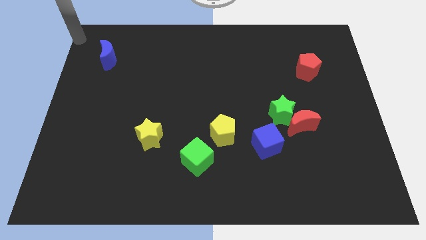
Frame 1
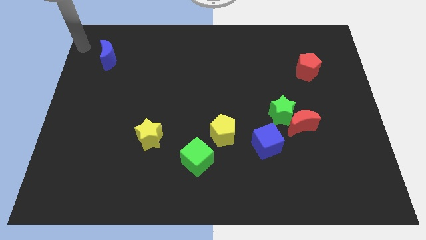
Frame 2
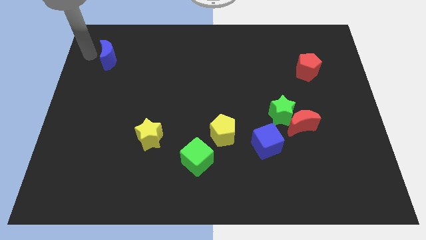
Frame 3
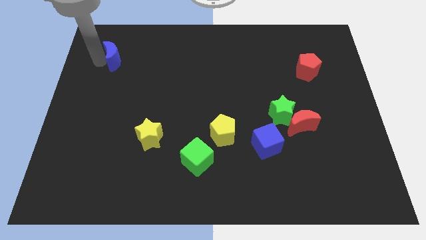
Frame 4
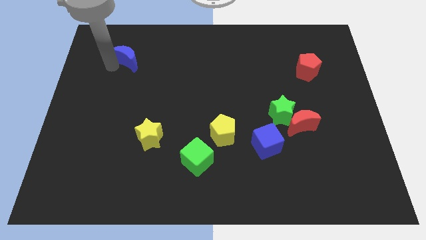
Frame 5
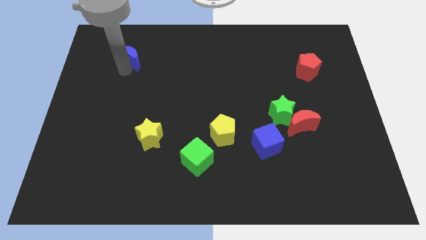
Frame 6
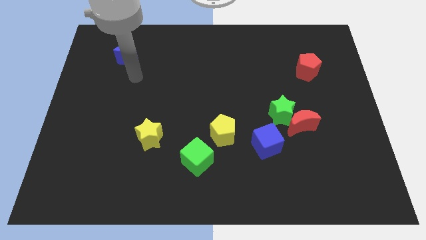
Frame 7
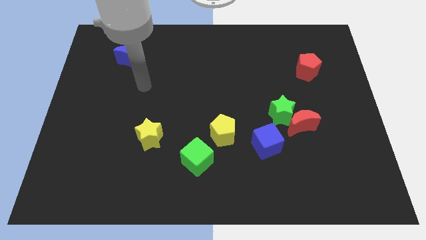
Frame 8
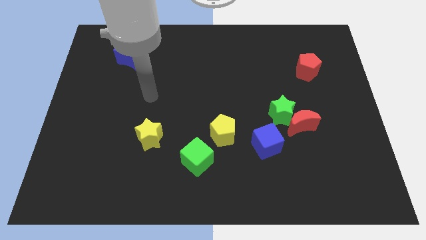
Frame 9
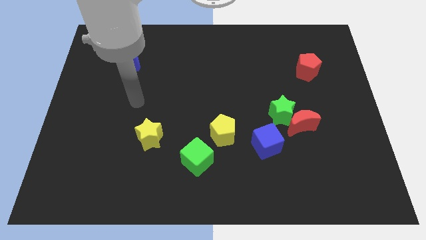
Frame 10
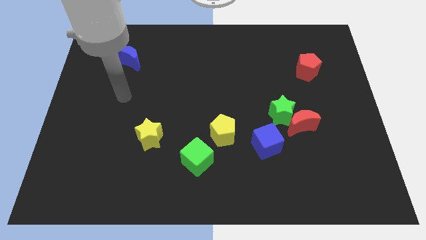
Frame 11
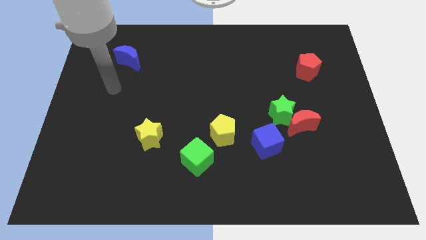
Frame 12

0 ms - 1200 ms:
slide the blue moon slightly to the right

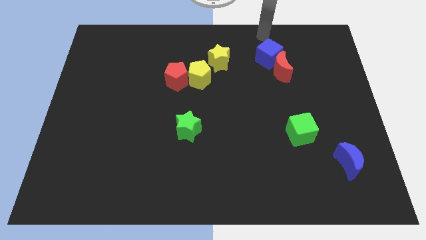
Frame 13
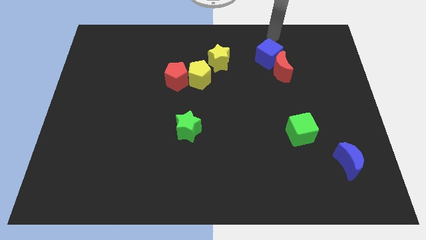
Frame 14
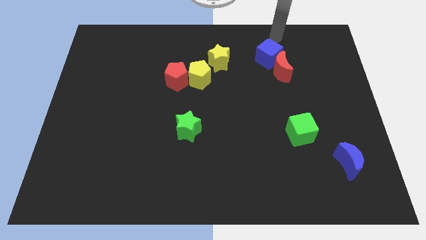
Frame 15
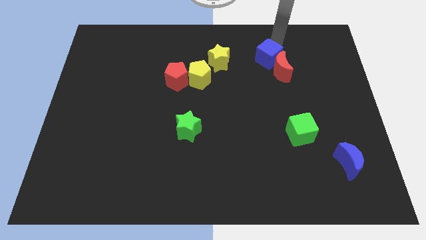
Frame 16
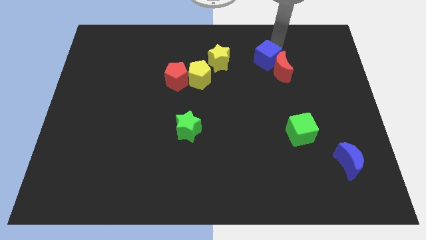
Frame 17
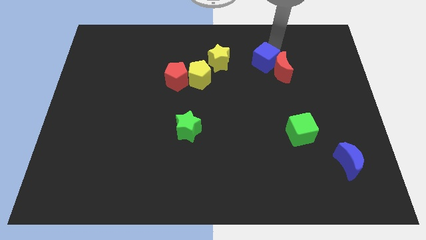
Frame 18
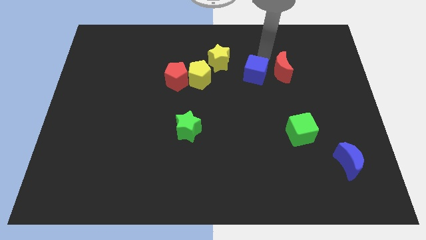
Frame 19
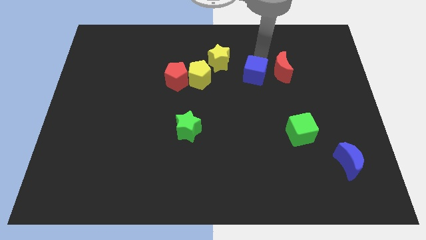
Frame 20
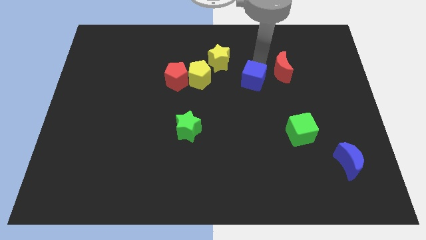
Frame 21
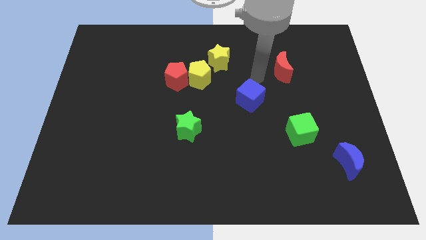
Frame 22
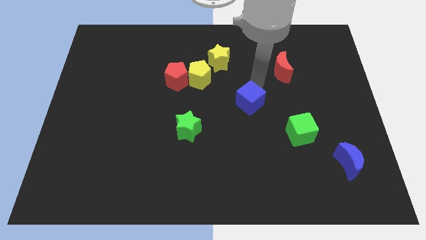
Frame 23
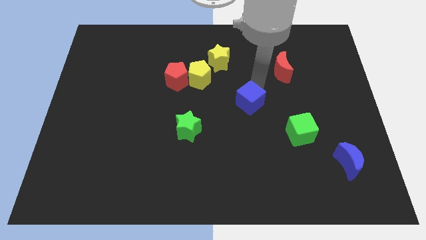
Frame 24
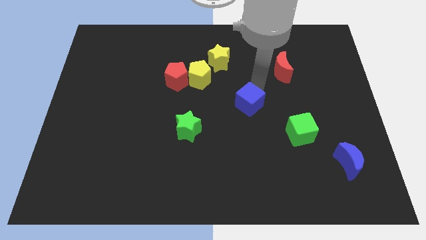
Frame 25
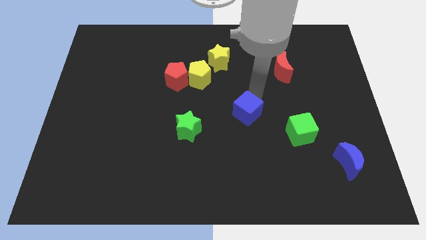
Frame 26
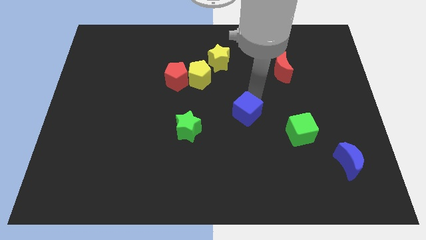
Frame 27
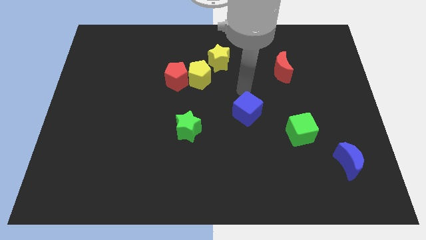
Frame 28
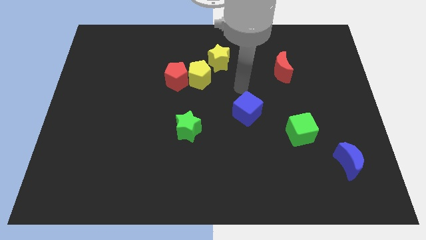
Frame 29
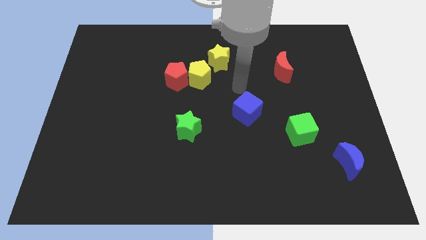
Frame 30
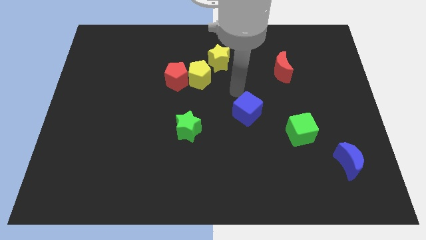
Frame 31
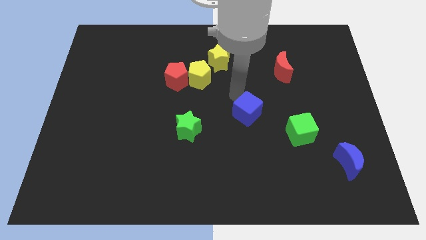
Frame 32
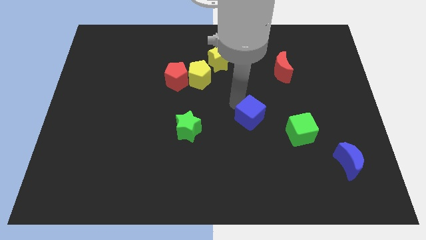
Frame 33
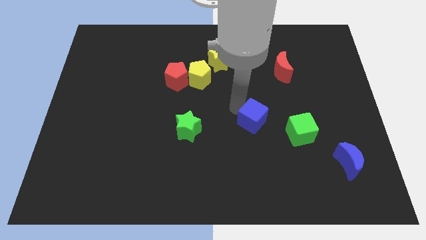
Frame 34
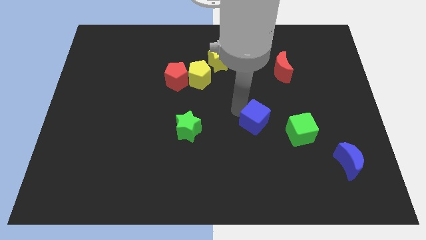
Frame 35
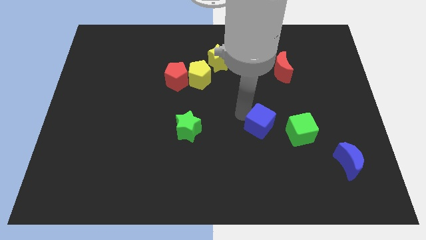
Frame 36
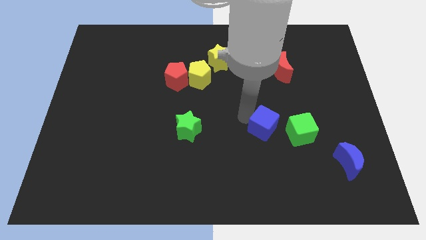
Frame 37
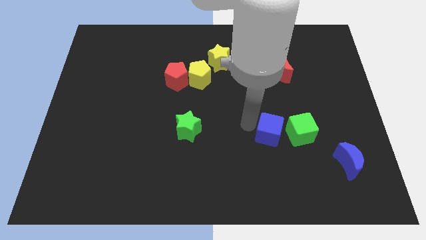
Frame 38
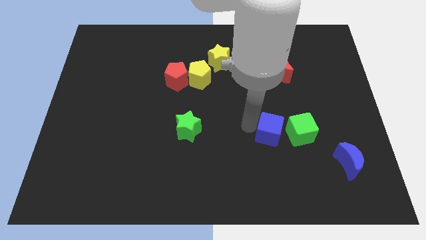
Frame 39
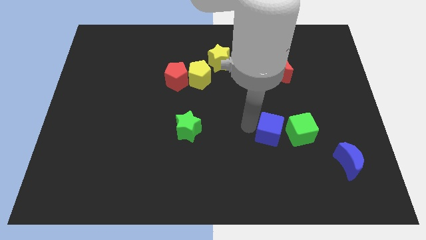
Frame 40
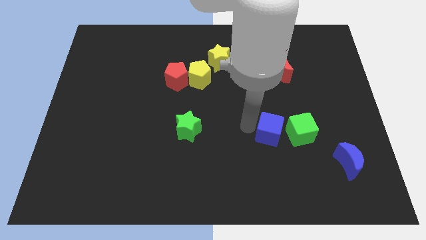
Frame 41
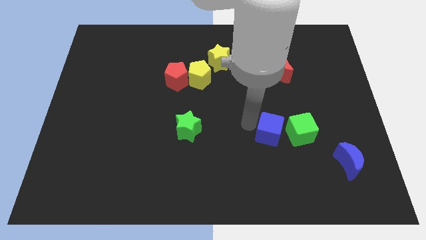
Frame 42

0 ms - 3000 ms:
separate the blue cube from the red crescent

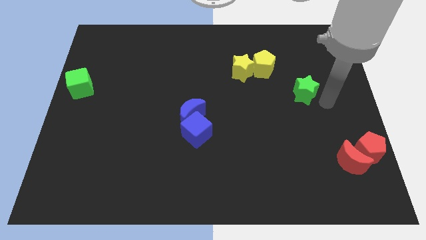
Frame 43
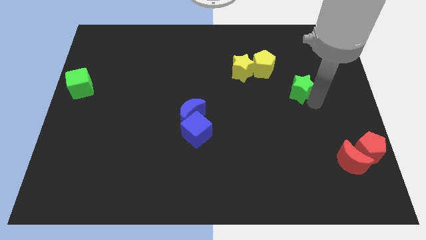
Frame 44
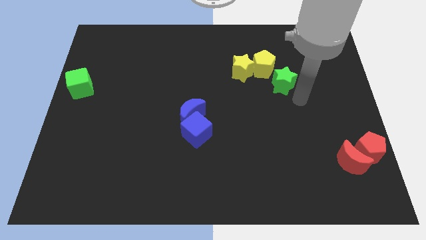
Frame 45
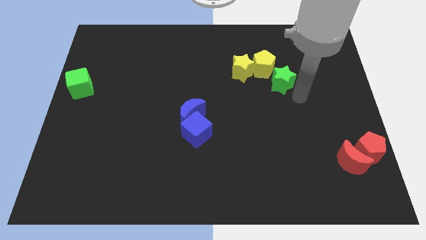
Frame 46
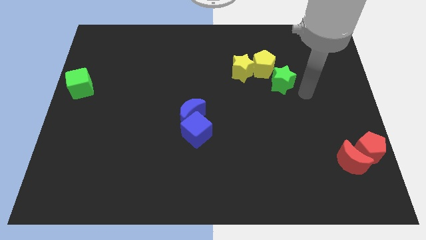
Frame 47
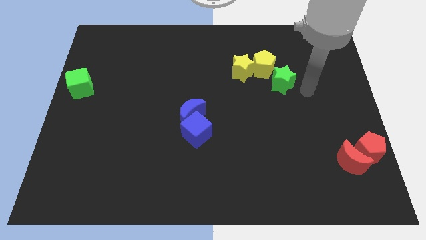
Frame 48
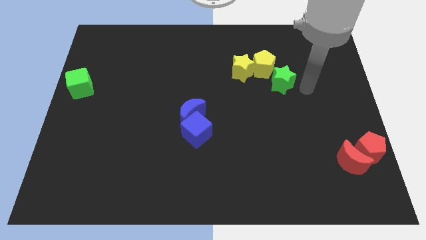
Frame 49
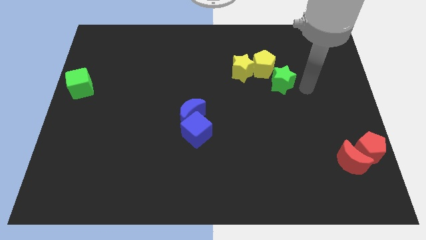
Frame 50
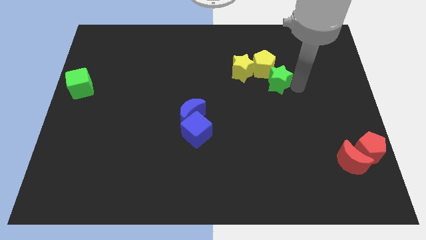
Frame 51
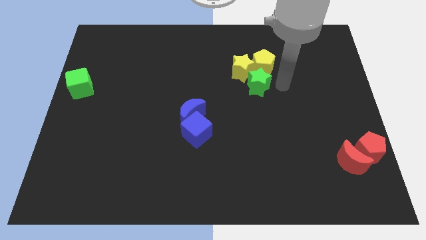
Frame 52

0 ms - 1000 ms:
push the green star into the bottom of yellow blocks

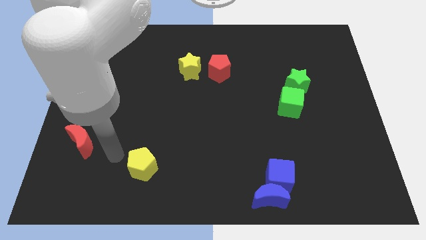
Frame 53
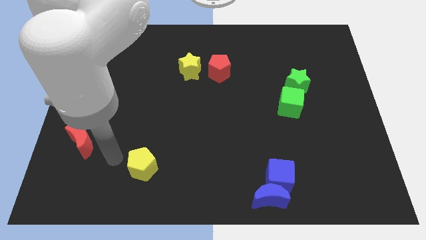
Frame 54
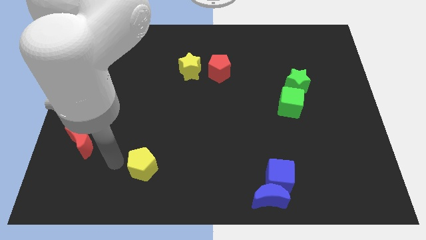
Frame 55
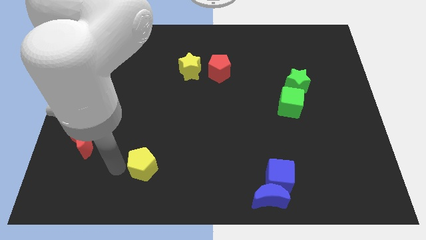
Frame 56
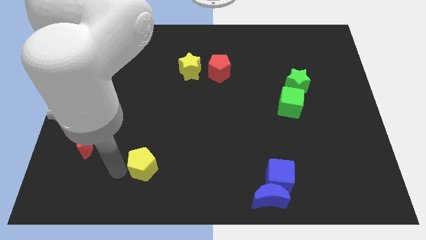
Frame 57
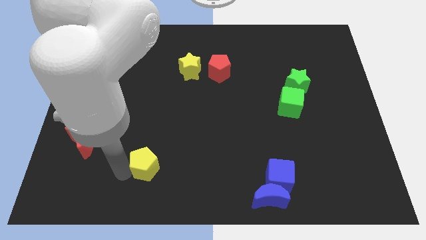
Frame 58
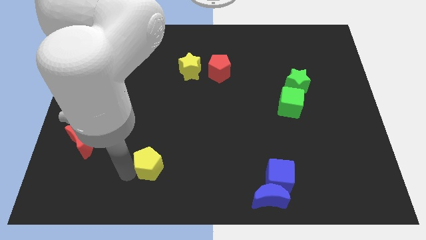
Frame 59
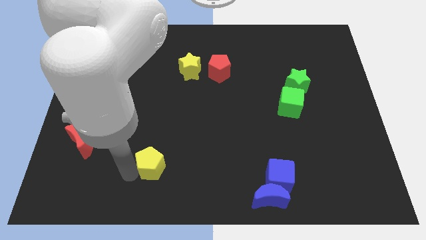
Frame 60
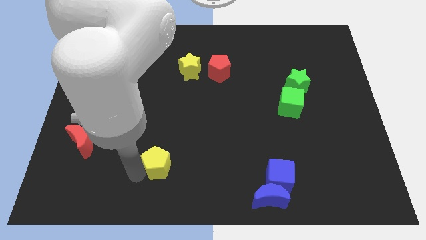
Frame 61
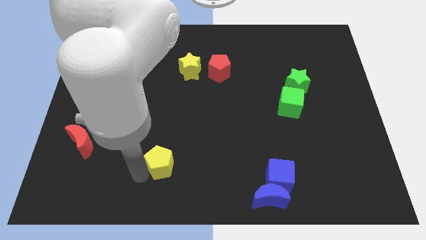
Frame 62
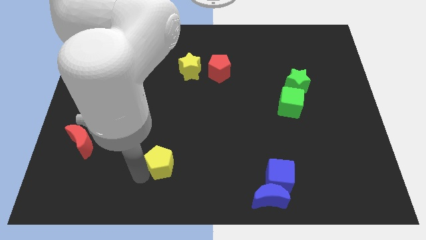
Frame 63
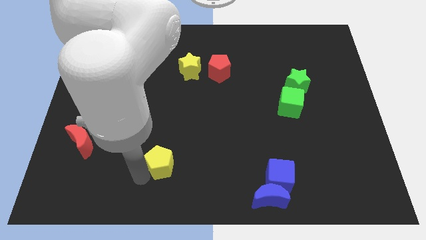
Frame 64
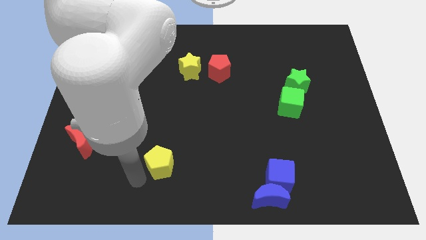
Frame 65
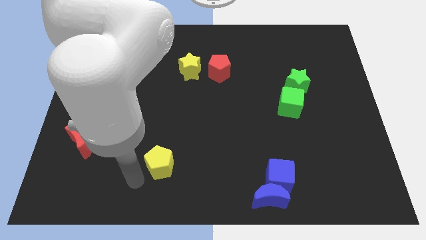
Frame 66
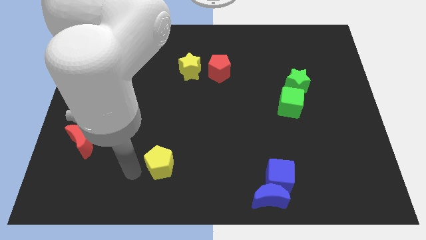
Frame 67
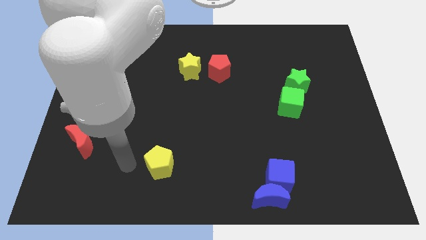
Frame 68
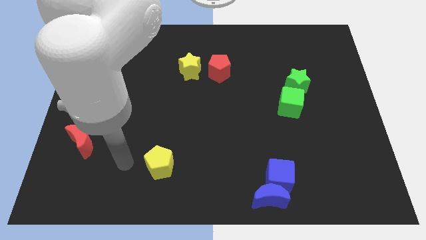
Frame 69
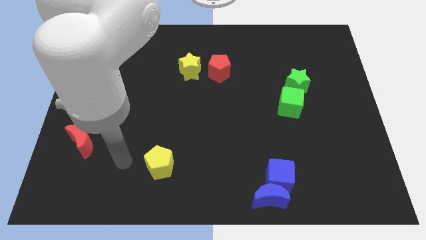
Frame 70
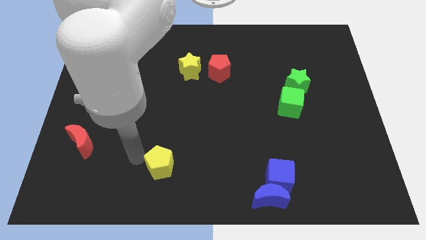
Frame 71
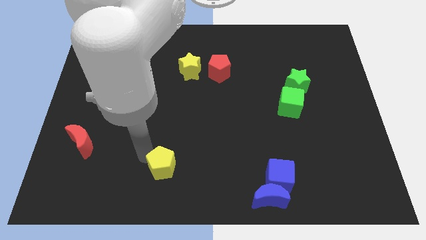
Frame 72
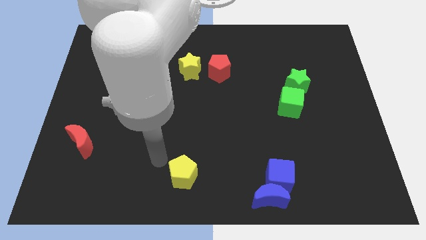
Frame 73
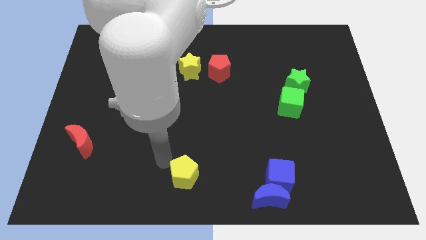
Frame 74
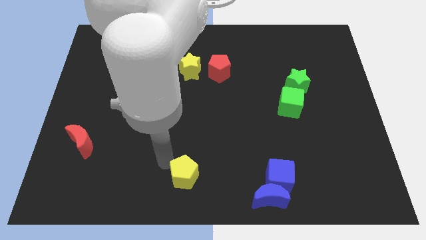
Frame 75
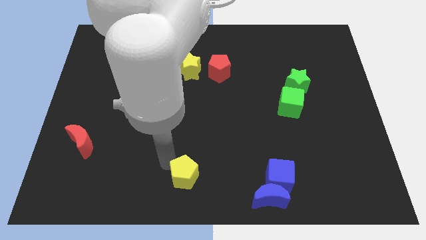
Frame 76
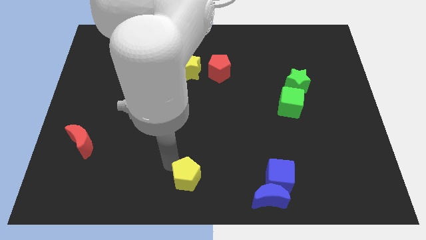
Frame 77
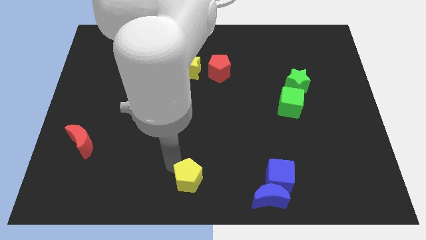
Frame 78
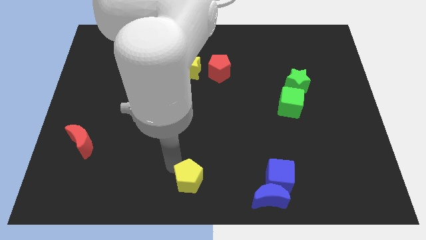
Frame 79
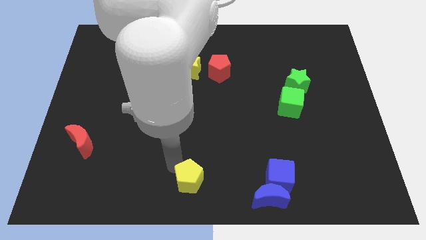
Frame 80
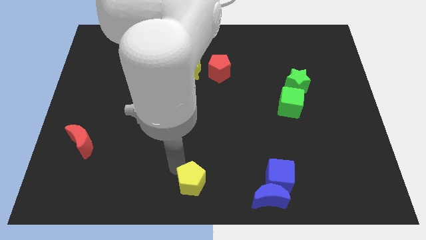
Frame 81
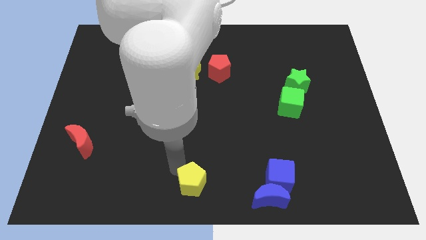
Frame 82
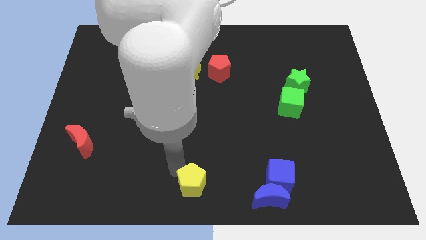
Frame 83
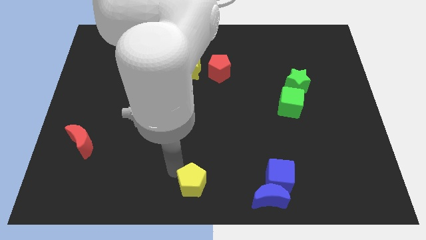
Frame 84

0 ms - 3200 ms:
push the yellow pentagon slightly towards the bottom center of the board

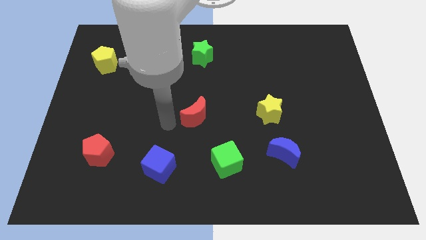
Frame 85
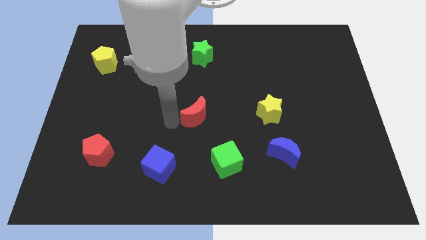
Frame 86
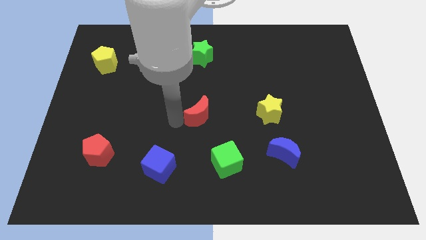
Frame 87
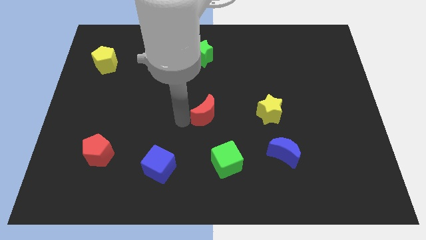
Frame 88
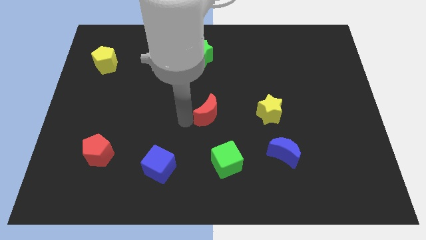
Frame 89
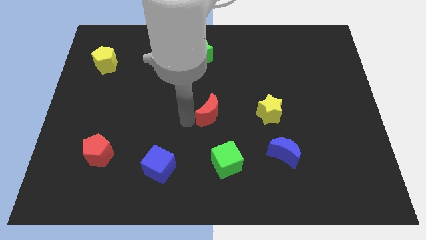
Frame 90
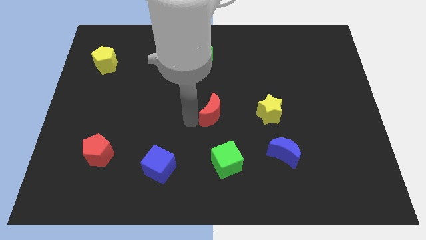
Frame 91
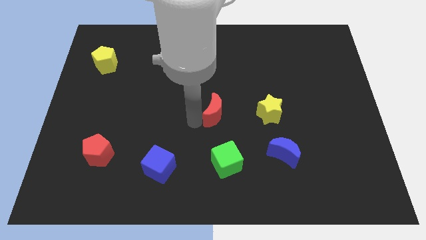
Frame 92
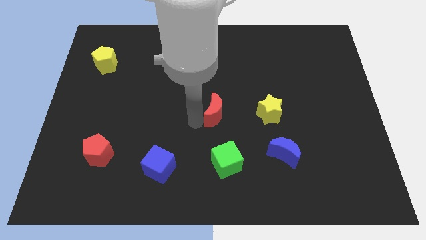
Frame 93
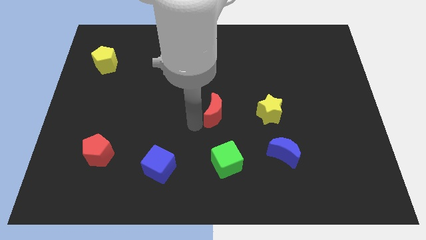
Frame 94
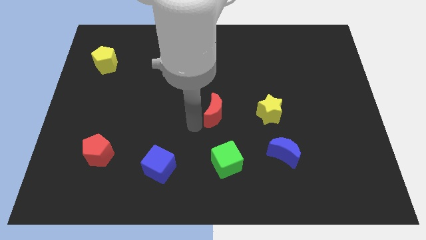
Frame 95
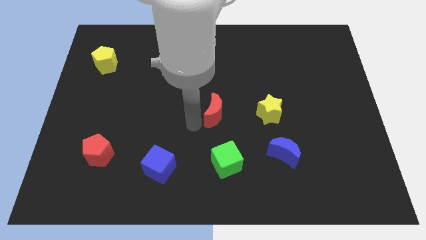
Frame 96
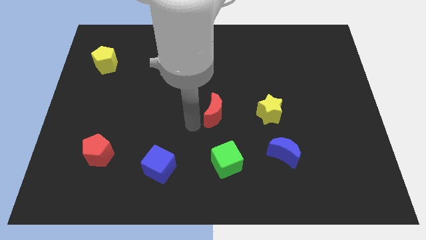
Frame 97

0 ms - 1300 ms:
place the red moon at the center of the board
